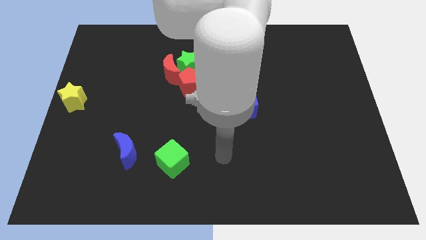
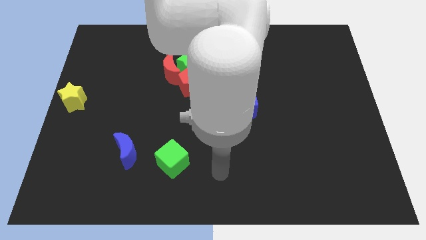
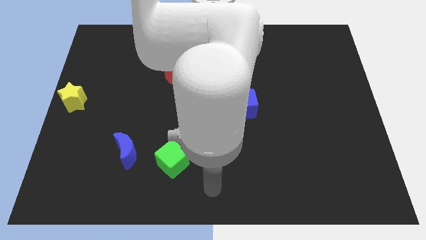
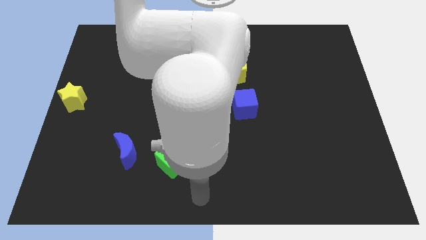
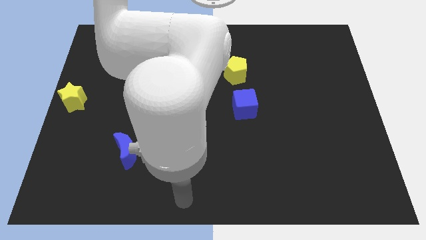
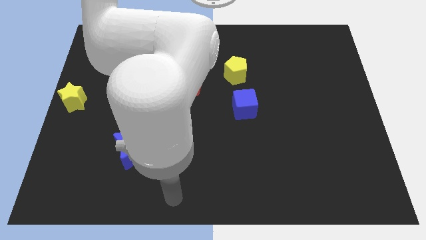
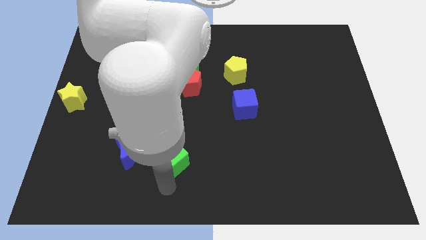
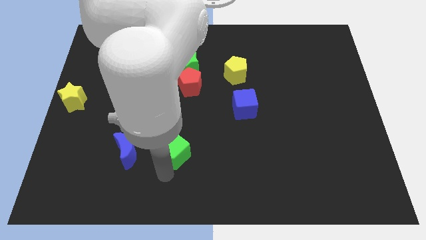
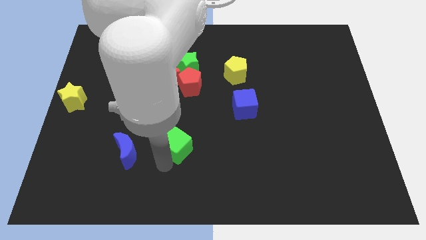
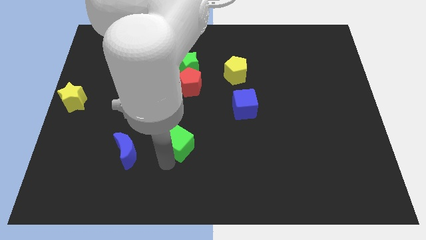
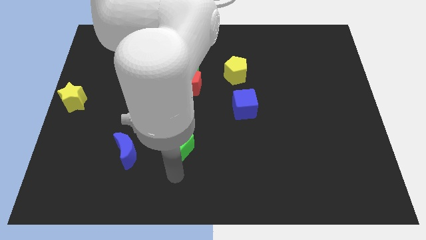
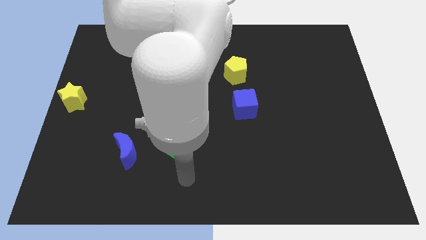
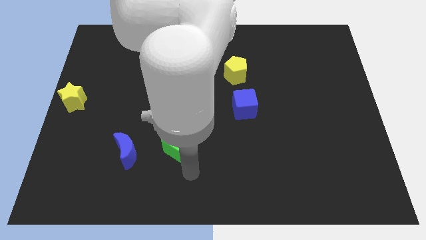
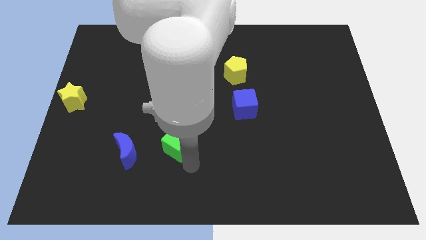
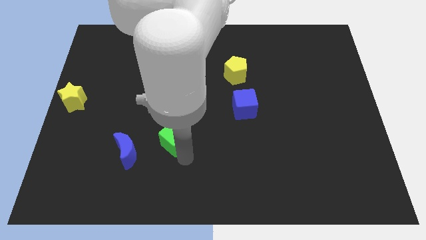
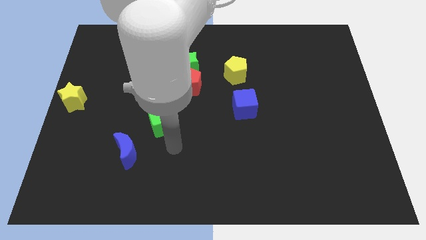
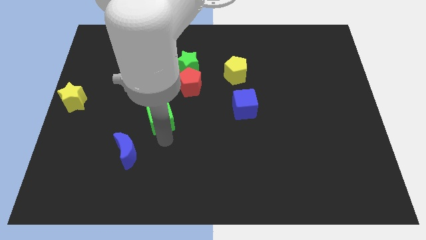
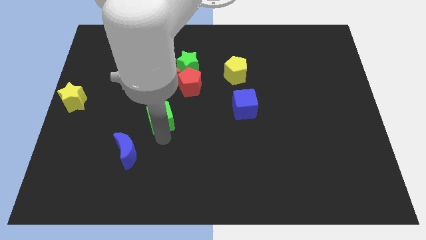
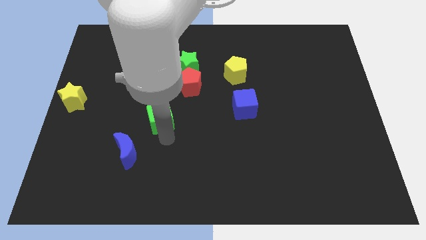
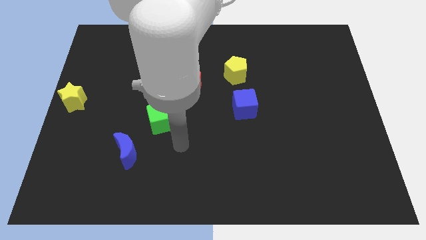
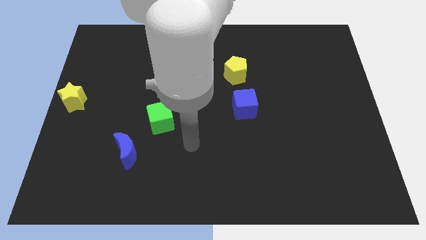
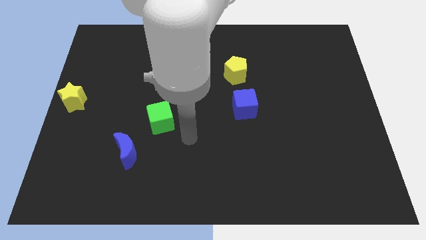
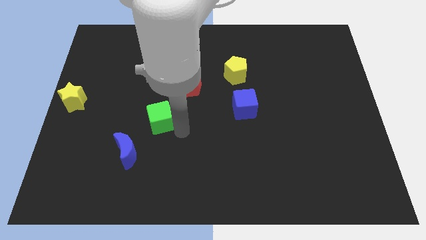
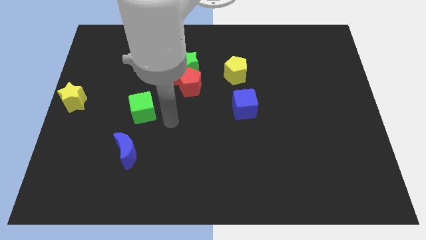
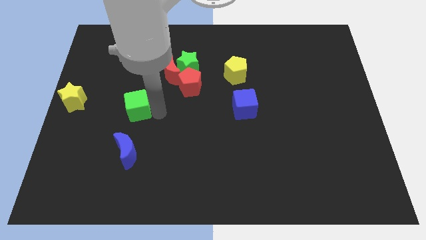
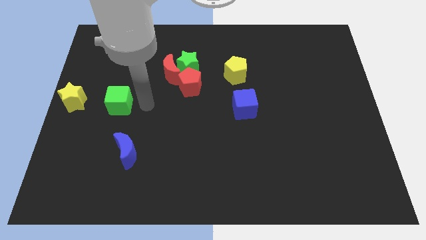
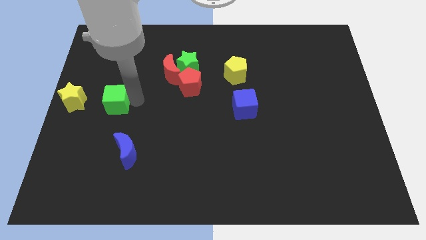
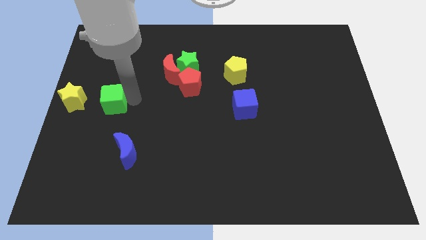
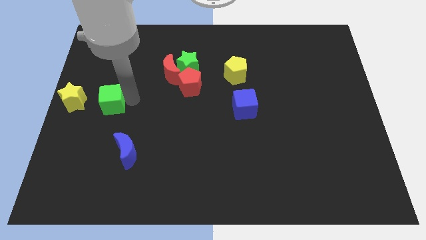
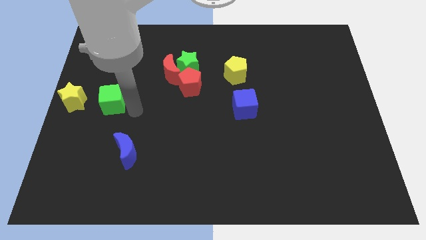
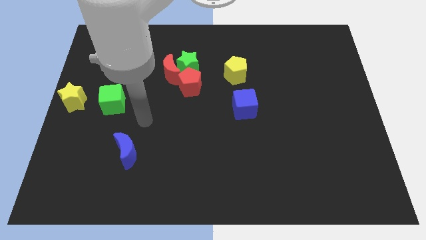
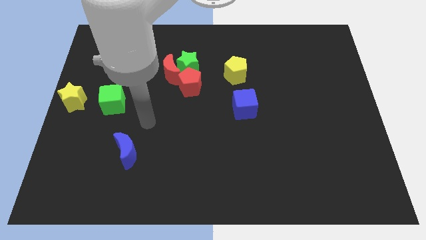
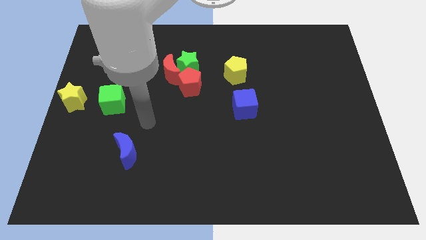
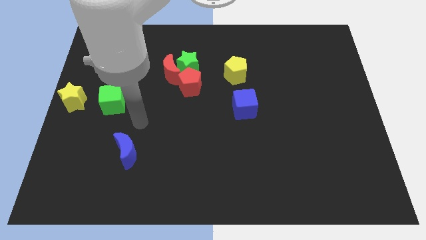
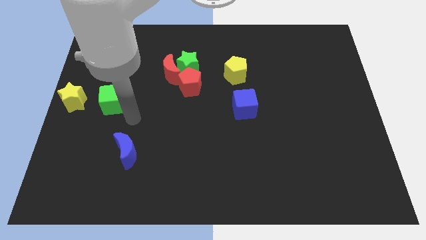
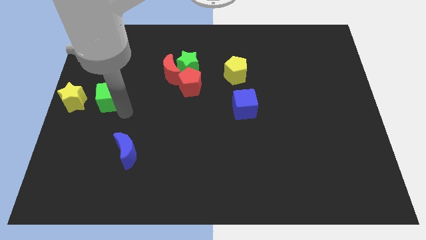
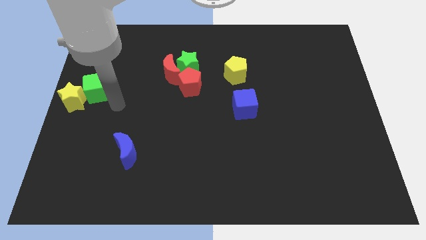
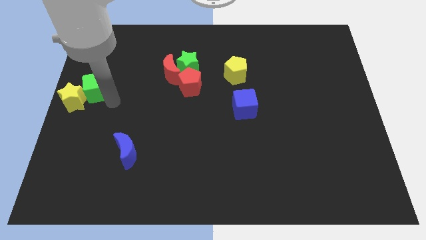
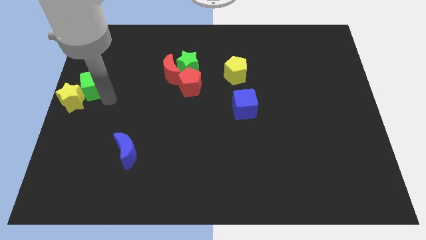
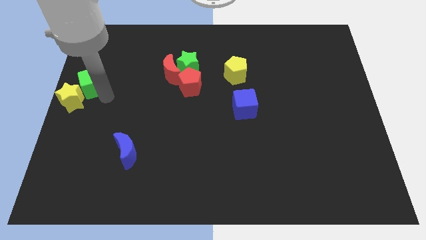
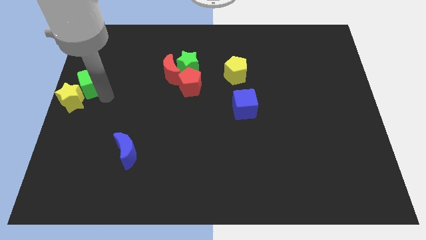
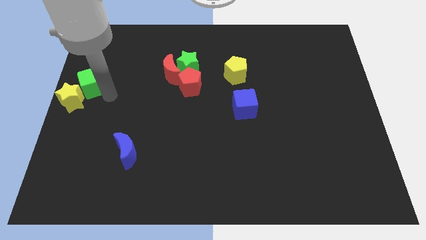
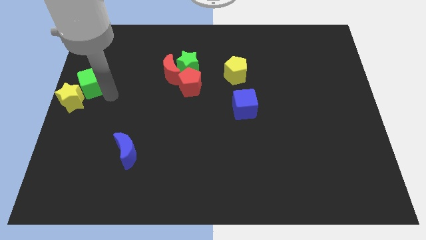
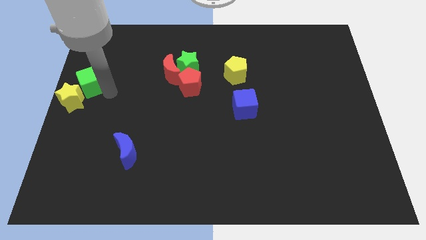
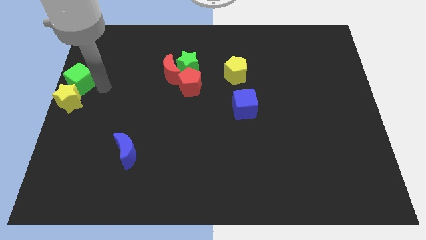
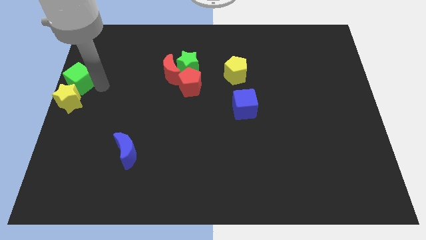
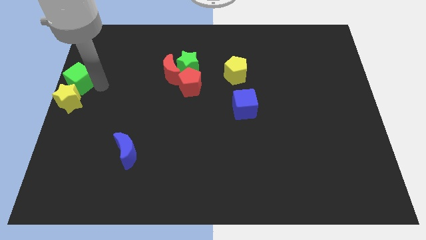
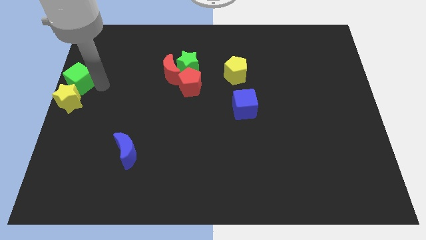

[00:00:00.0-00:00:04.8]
push the green cube to the top side of the yellow star

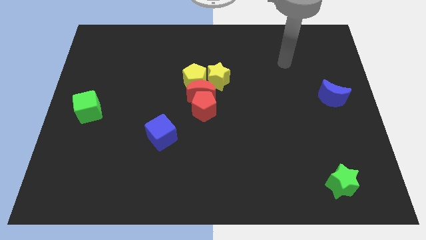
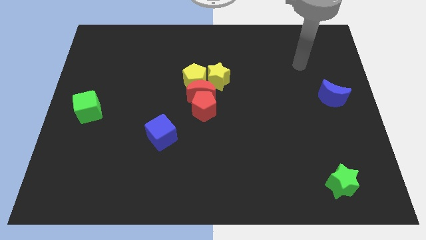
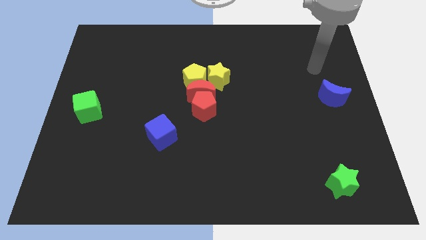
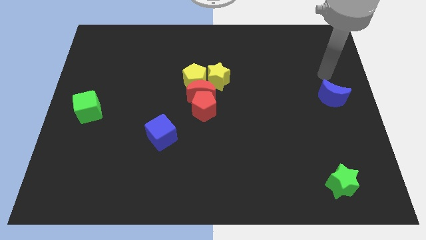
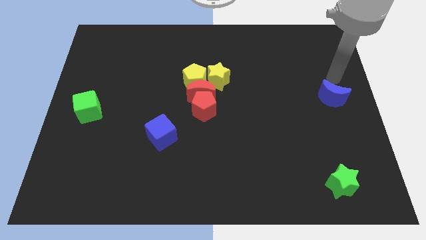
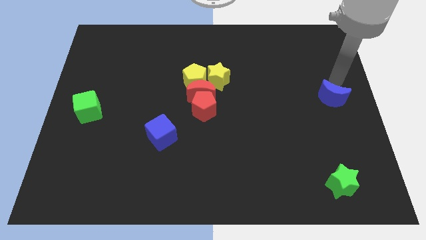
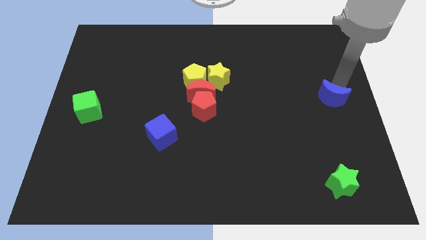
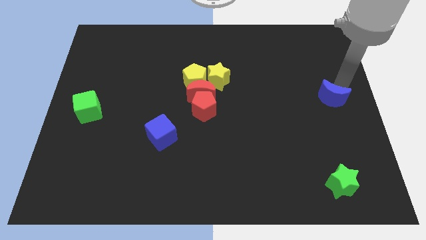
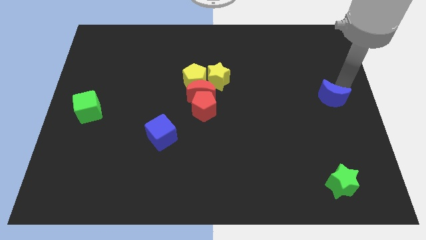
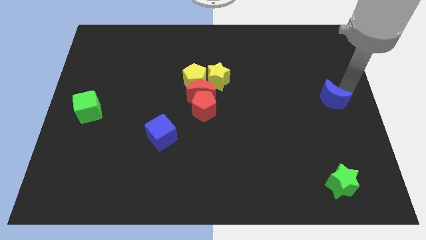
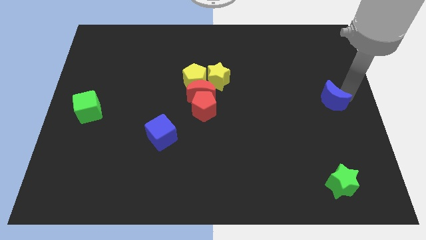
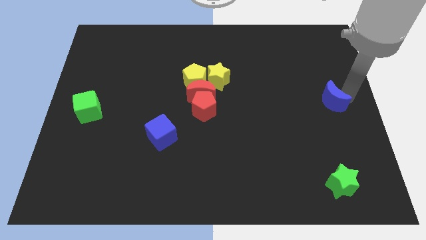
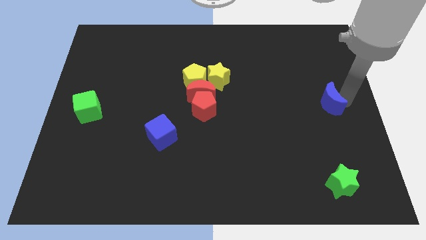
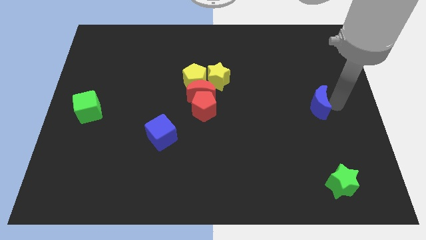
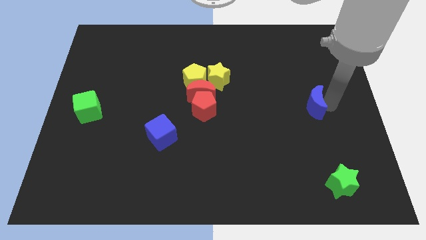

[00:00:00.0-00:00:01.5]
push the blue crescent slightly to the left

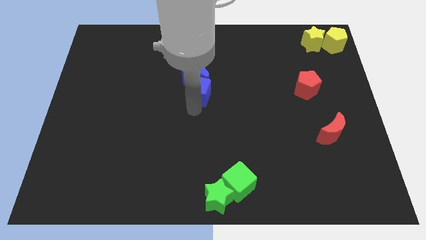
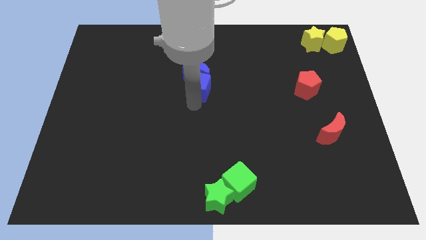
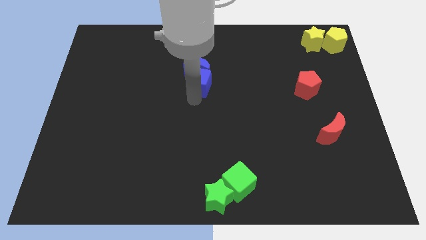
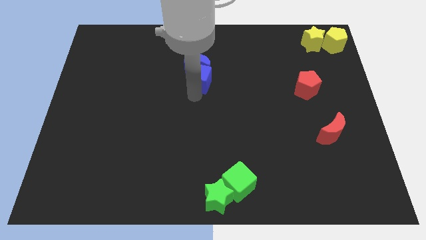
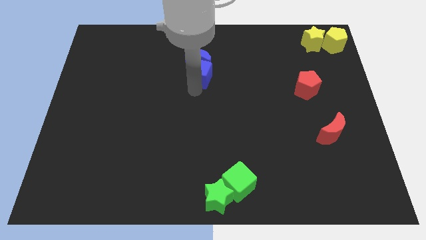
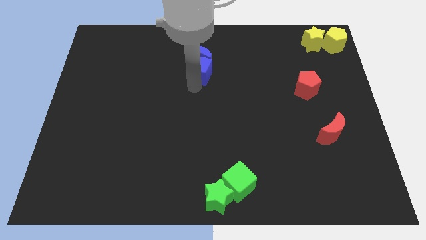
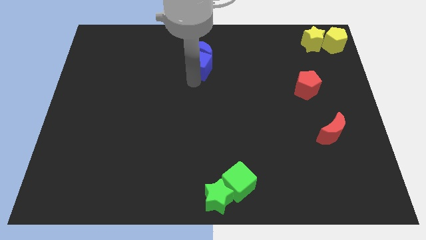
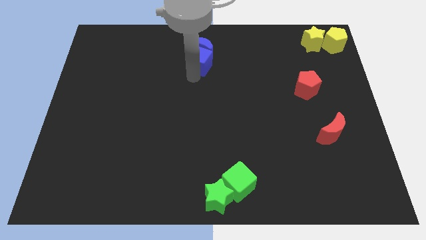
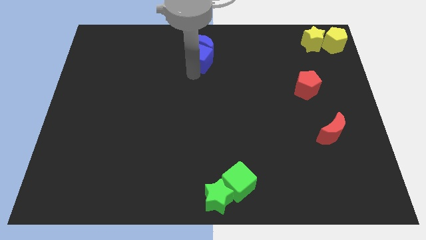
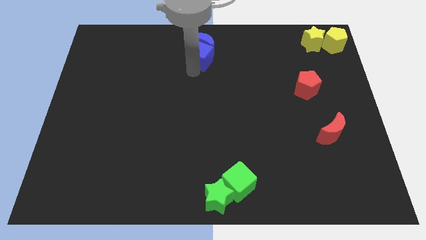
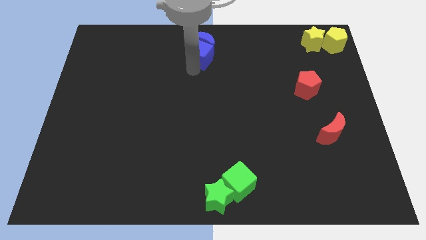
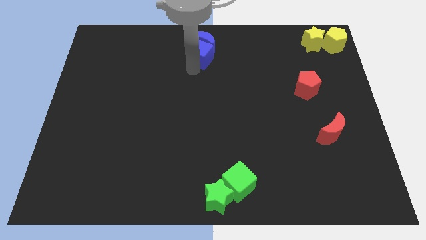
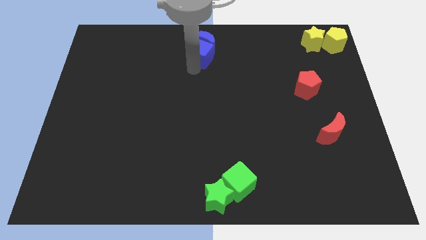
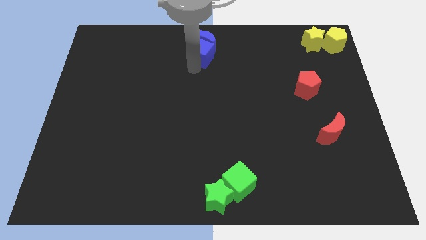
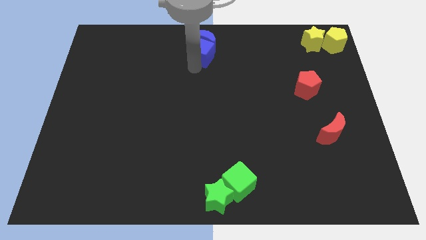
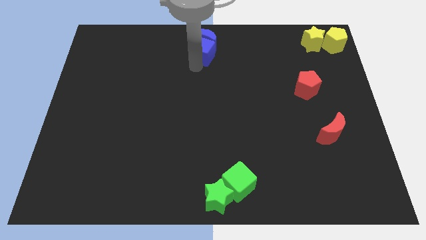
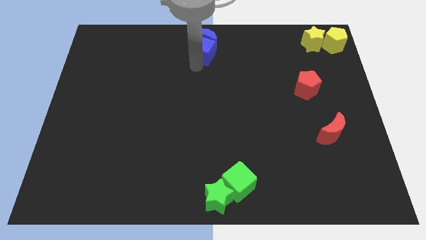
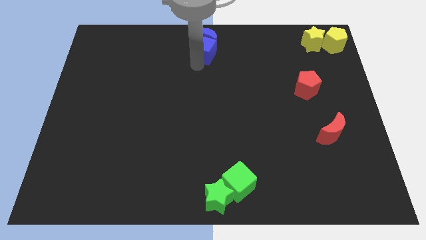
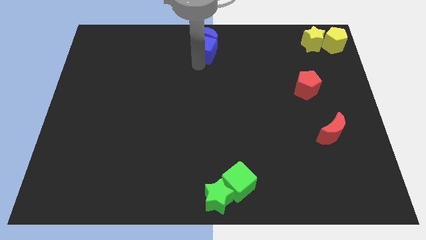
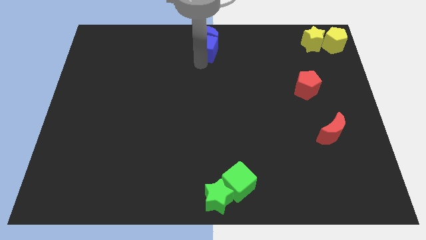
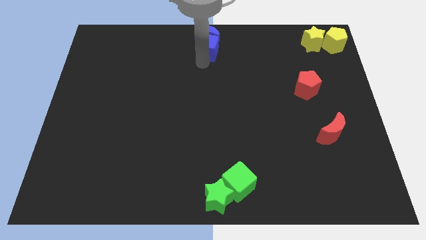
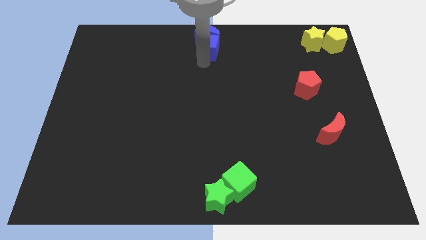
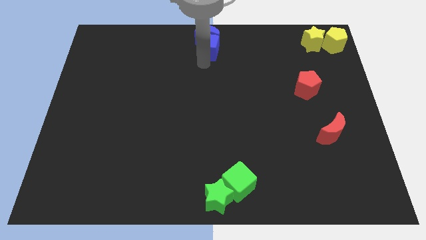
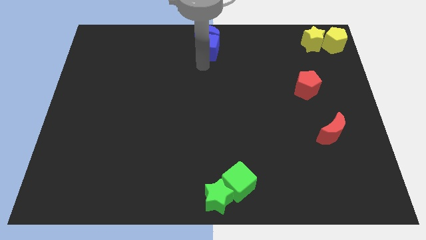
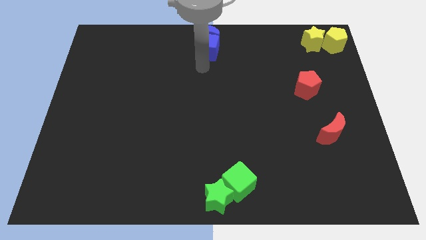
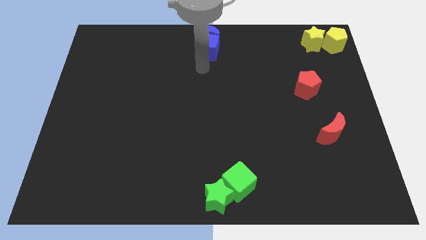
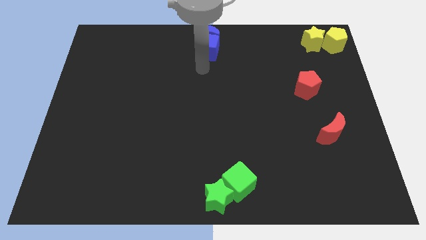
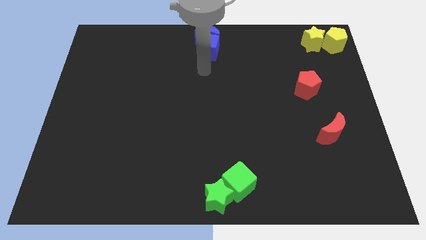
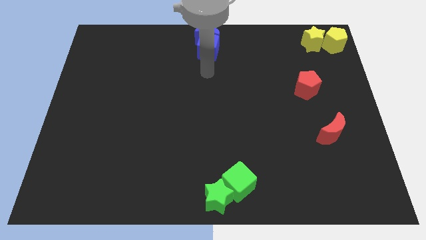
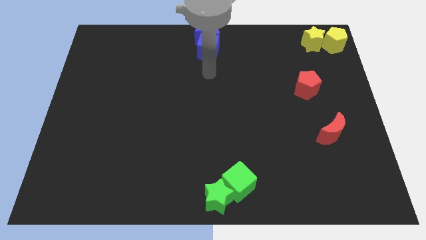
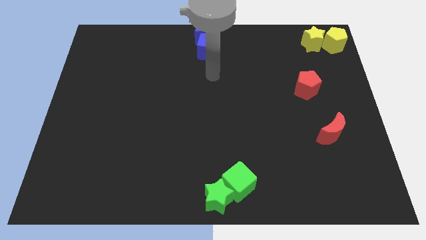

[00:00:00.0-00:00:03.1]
push blue cube along with blue moon towards top center of the board
